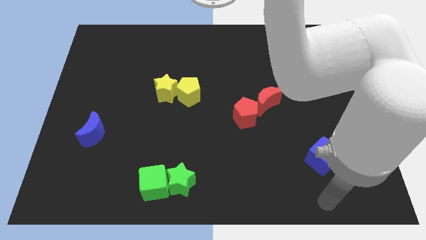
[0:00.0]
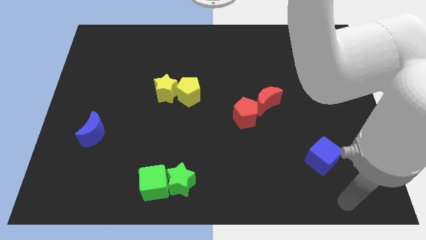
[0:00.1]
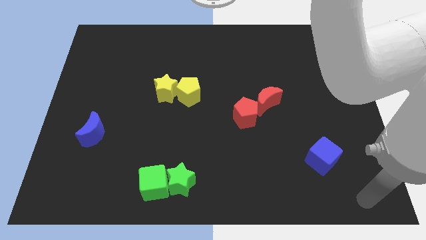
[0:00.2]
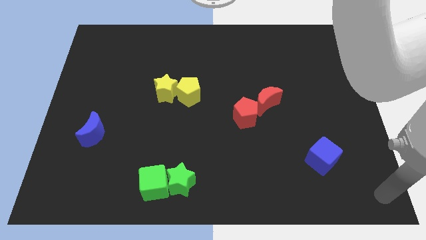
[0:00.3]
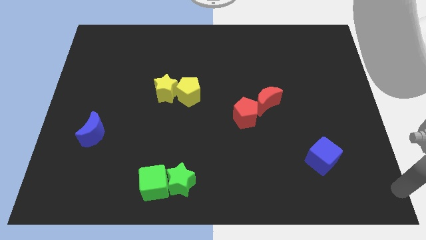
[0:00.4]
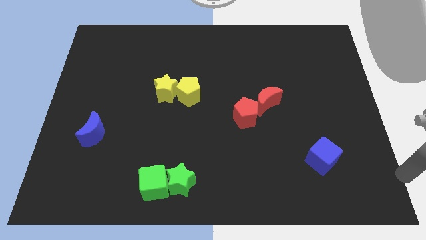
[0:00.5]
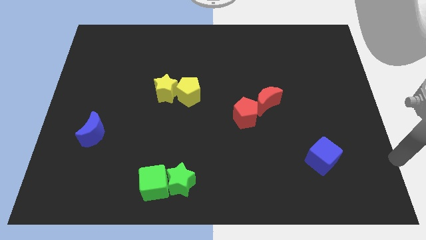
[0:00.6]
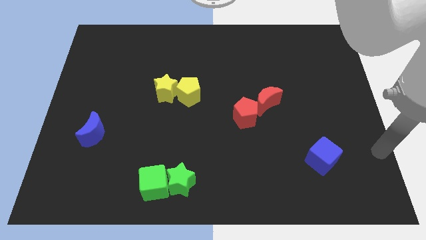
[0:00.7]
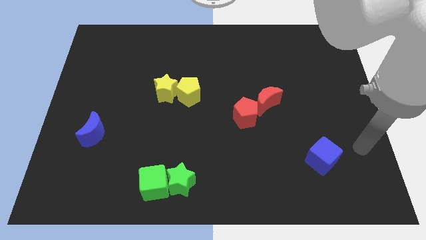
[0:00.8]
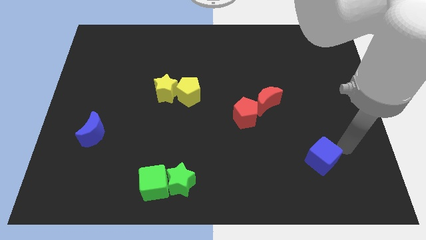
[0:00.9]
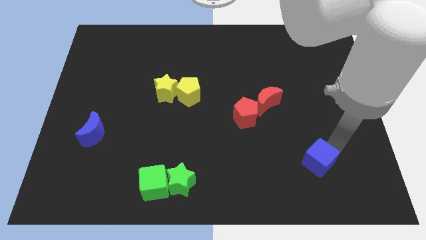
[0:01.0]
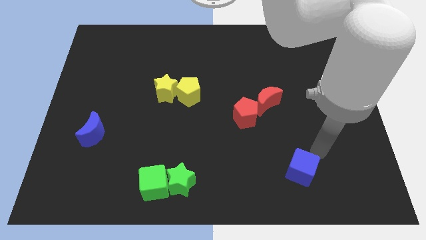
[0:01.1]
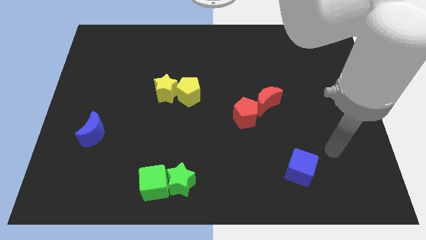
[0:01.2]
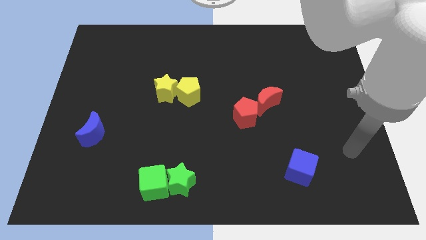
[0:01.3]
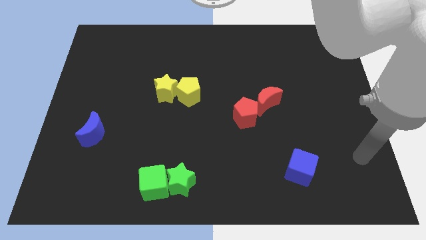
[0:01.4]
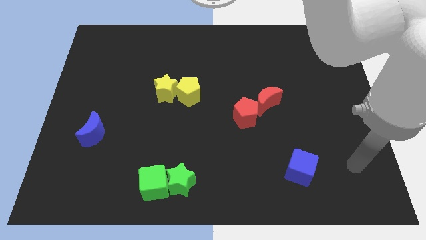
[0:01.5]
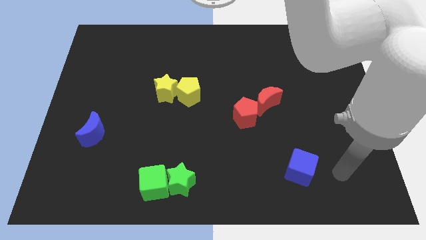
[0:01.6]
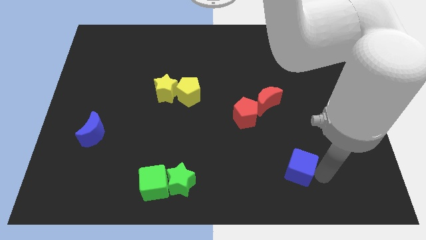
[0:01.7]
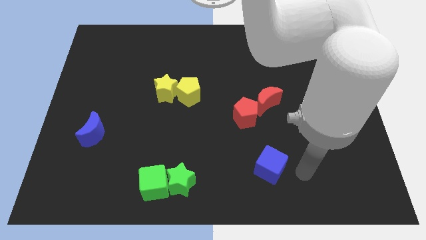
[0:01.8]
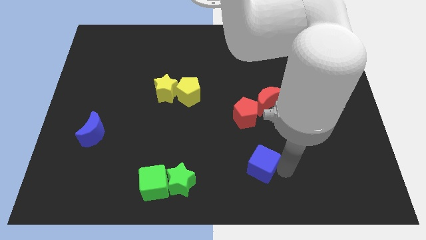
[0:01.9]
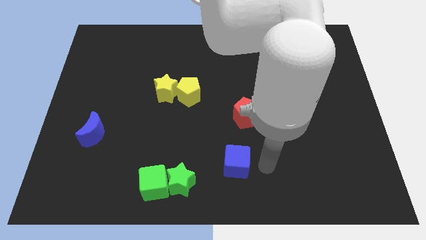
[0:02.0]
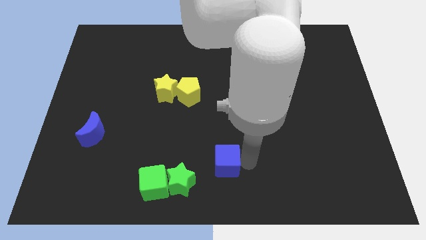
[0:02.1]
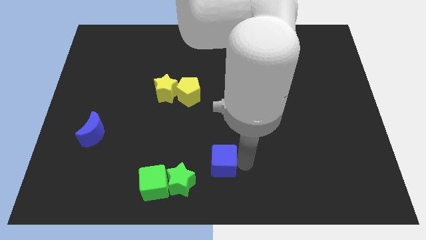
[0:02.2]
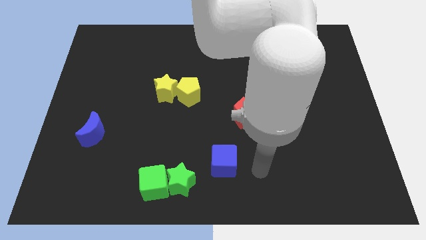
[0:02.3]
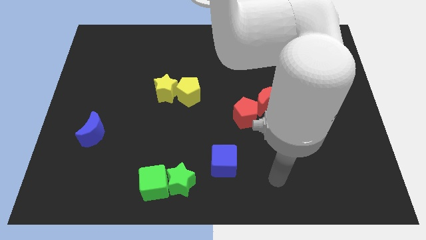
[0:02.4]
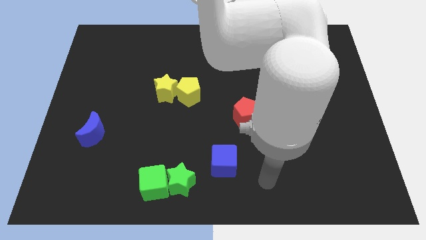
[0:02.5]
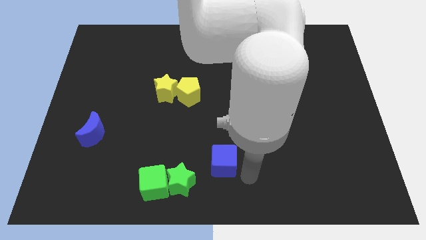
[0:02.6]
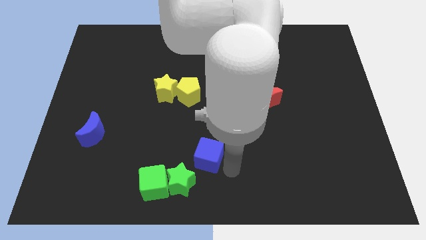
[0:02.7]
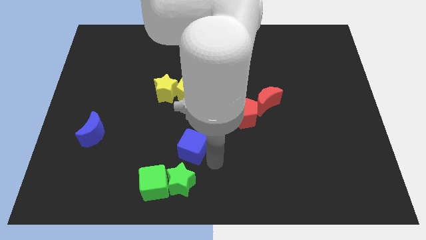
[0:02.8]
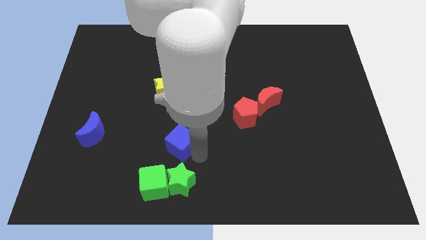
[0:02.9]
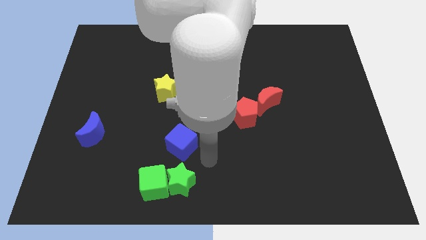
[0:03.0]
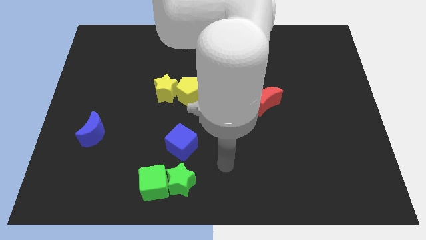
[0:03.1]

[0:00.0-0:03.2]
put the blue cube to the top side of the green star

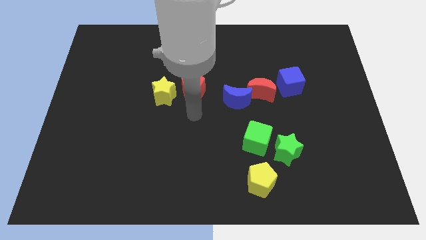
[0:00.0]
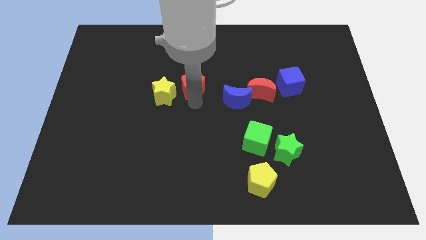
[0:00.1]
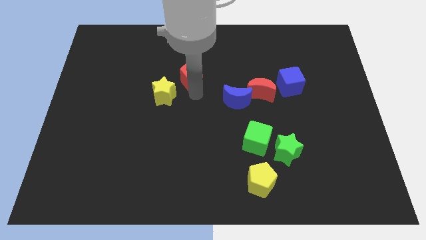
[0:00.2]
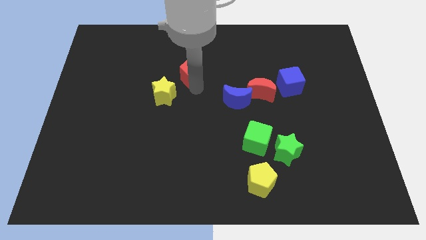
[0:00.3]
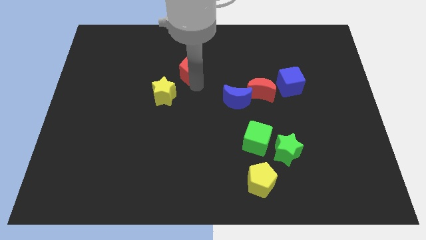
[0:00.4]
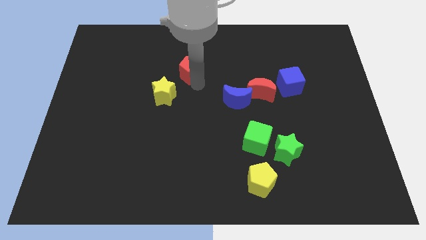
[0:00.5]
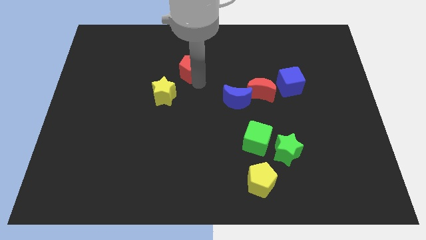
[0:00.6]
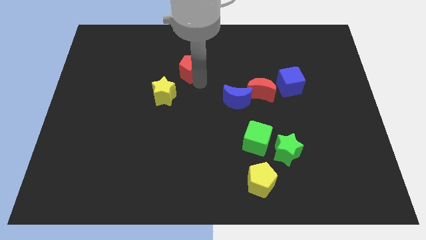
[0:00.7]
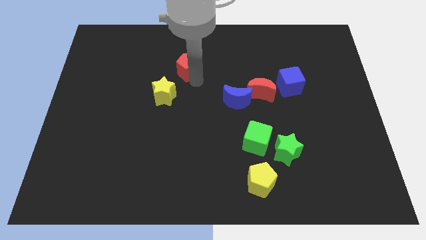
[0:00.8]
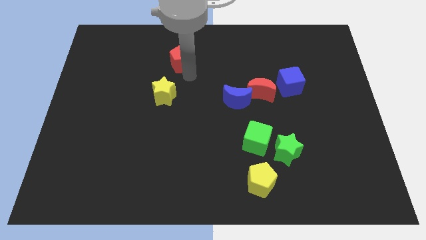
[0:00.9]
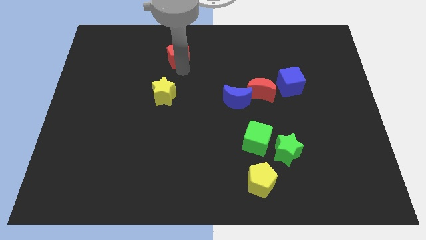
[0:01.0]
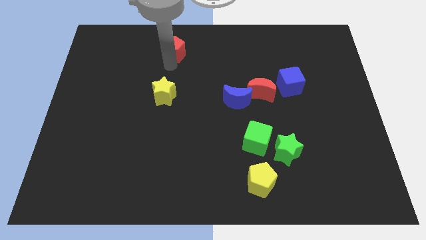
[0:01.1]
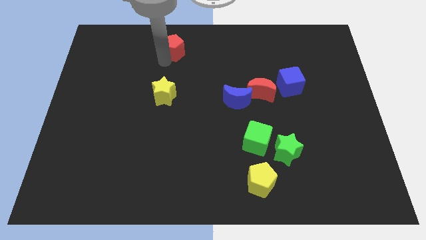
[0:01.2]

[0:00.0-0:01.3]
move the red pentagon vertically at the top side of the yellow star

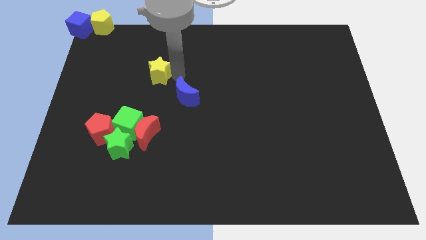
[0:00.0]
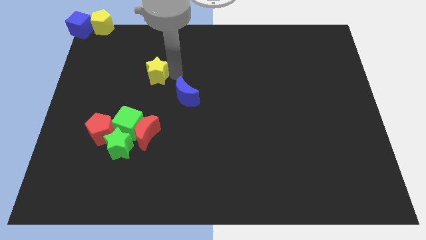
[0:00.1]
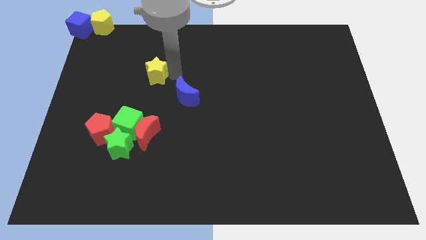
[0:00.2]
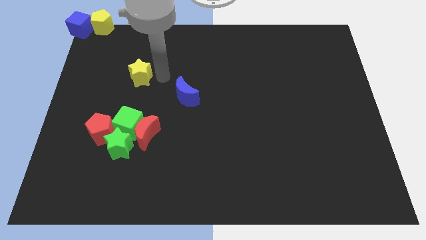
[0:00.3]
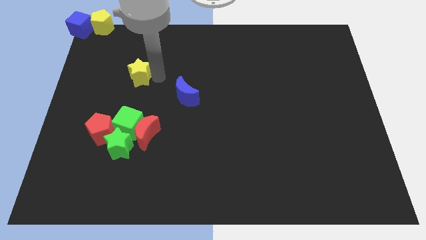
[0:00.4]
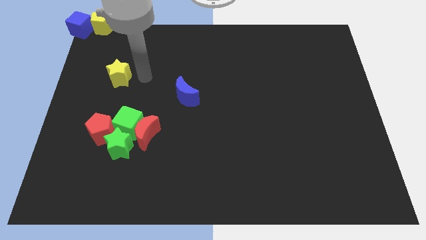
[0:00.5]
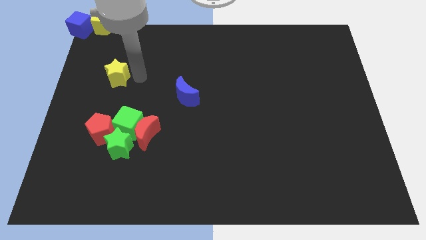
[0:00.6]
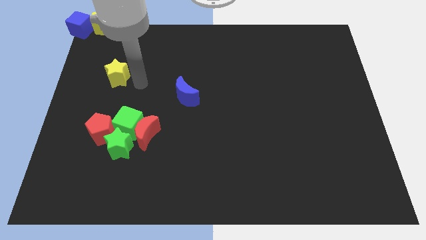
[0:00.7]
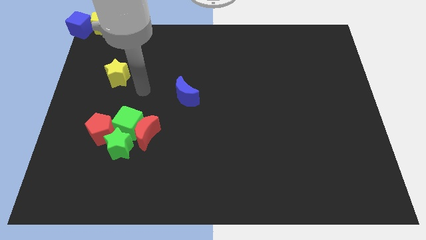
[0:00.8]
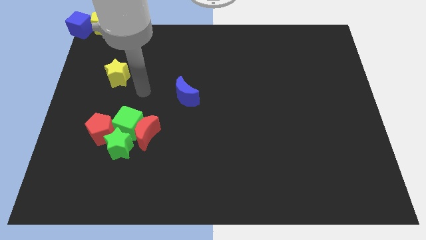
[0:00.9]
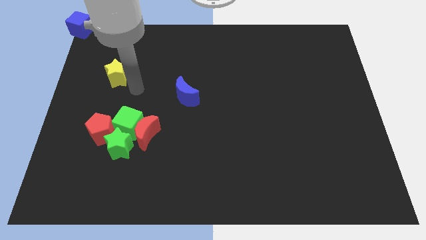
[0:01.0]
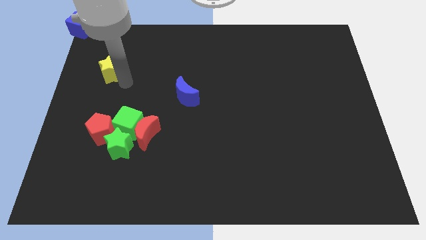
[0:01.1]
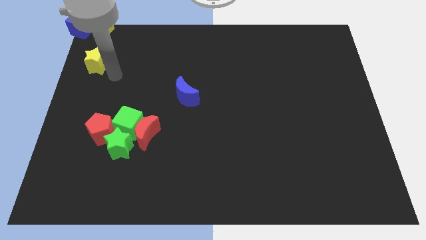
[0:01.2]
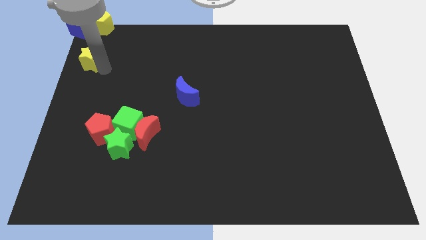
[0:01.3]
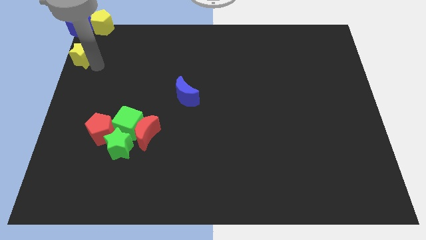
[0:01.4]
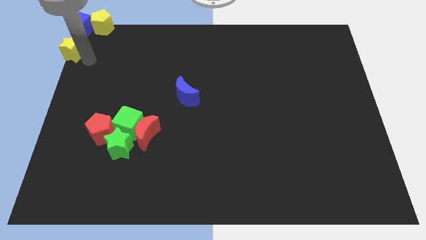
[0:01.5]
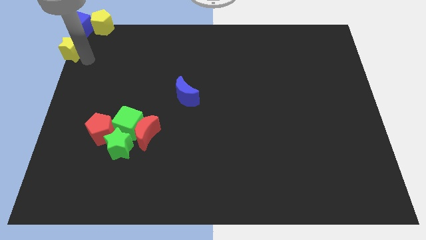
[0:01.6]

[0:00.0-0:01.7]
move the yellow star towards the top left side of the board

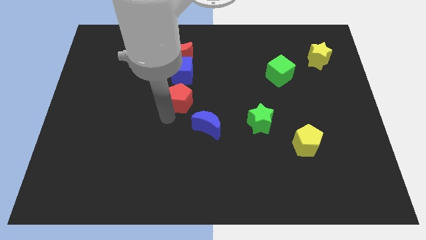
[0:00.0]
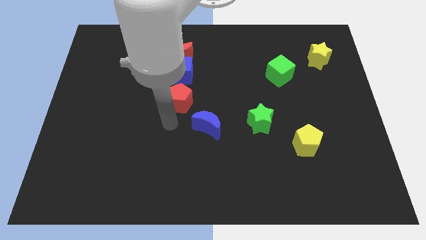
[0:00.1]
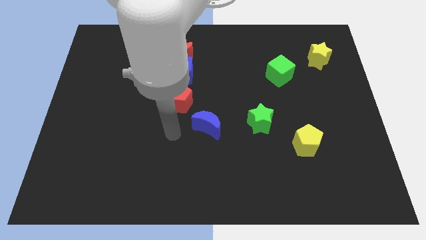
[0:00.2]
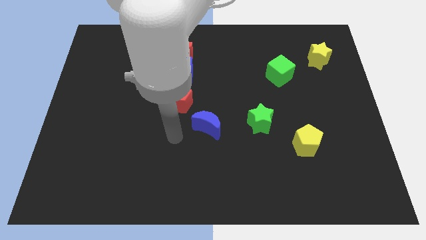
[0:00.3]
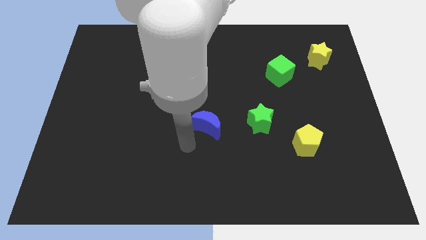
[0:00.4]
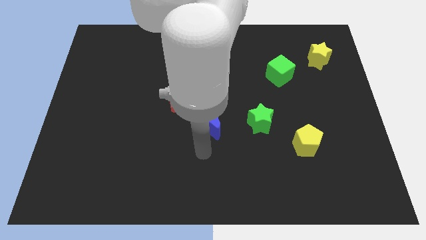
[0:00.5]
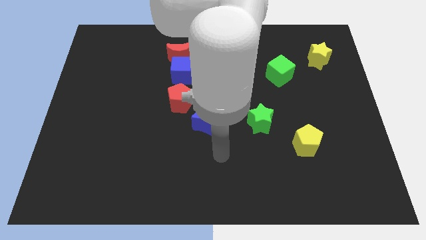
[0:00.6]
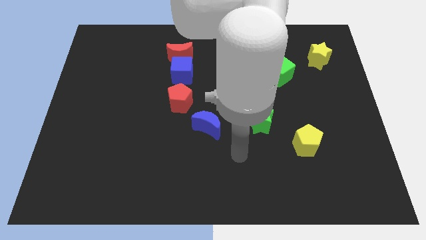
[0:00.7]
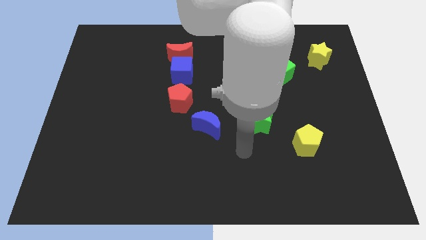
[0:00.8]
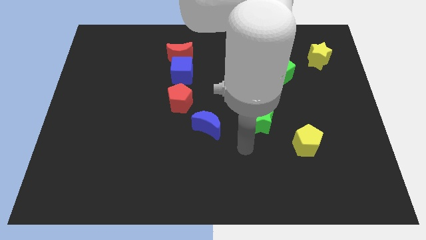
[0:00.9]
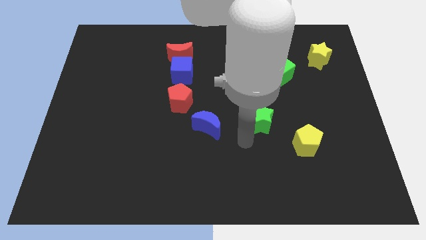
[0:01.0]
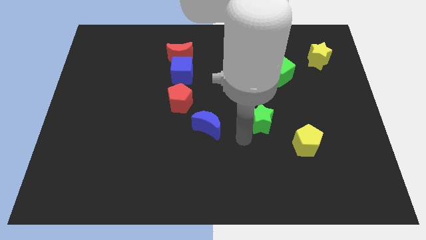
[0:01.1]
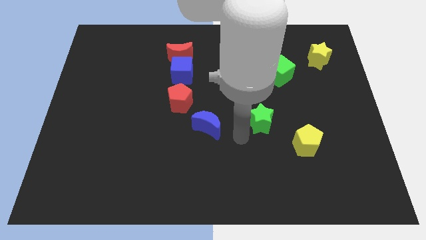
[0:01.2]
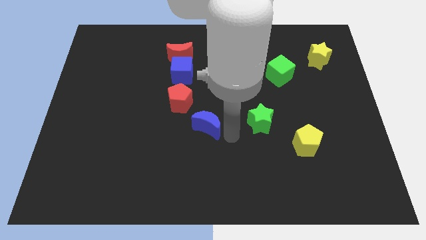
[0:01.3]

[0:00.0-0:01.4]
point your arm towards the right side of the blue moon

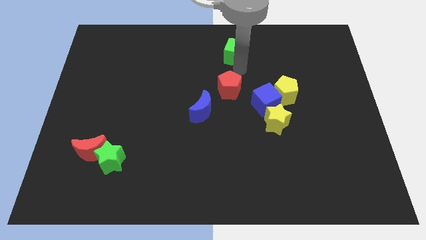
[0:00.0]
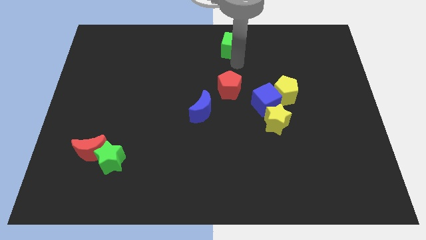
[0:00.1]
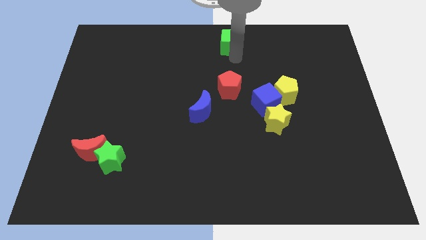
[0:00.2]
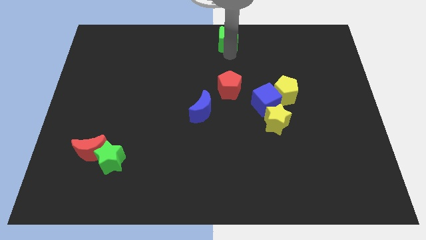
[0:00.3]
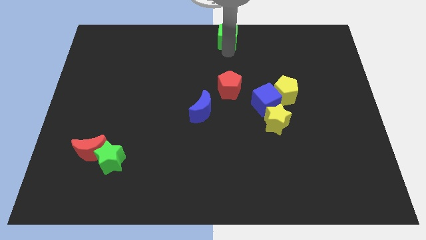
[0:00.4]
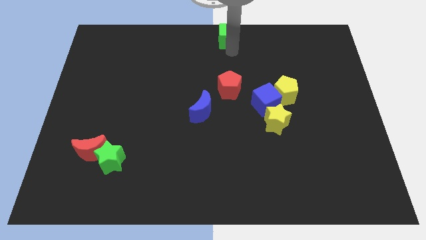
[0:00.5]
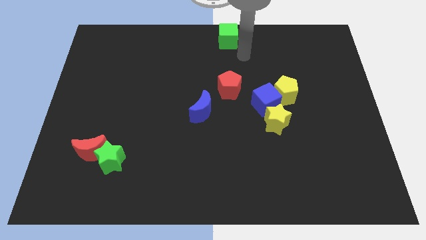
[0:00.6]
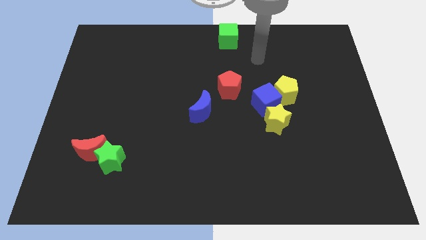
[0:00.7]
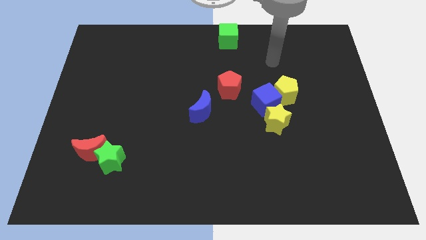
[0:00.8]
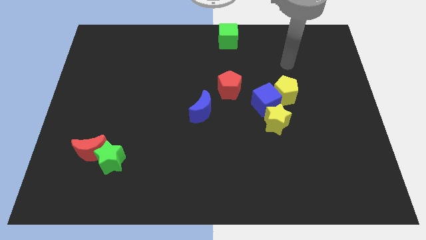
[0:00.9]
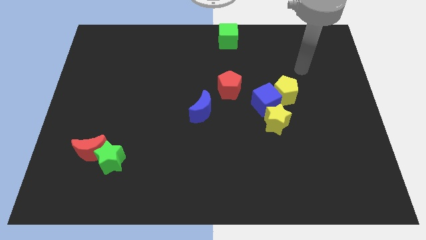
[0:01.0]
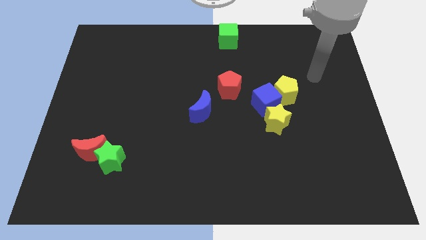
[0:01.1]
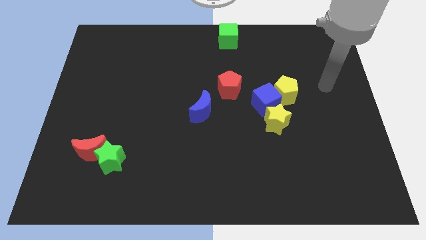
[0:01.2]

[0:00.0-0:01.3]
push the green cube to the top center
